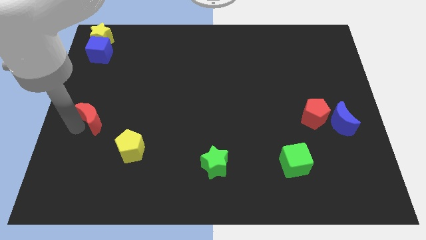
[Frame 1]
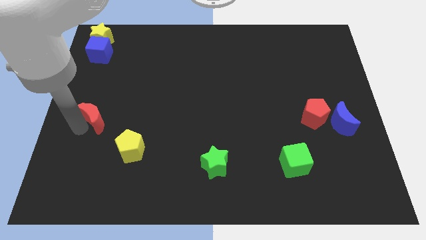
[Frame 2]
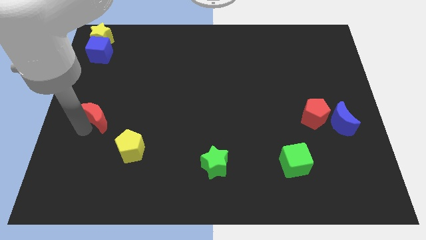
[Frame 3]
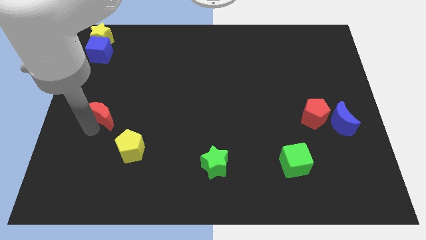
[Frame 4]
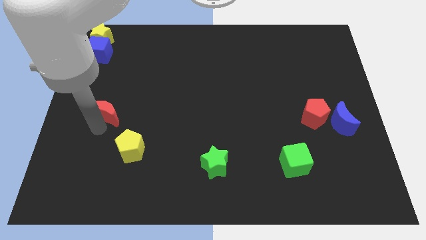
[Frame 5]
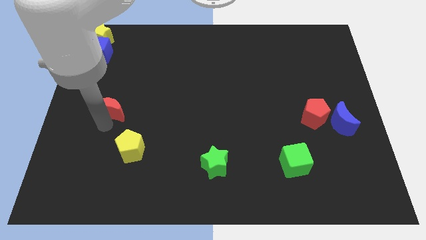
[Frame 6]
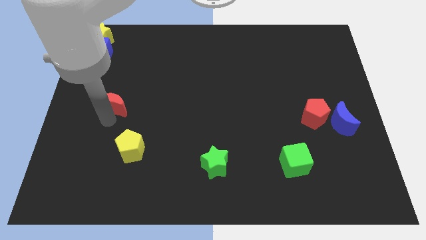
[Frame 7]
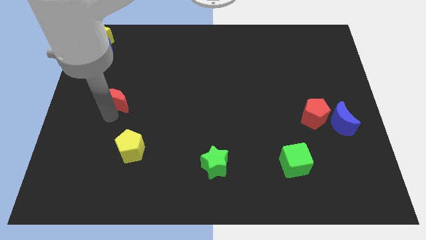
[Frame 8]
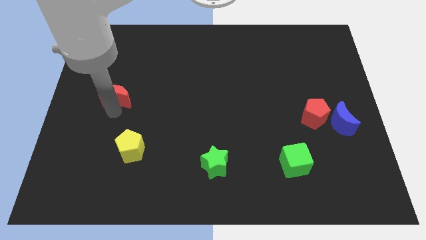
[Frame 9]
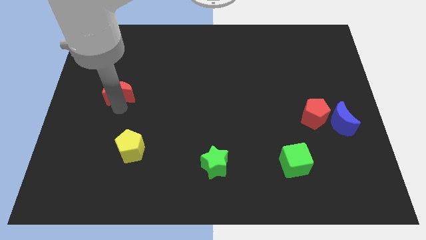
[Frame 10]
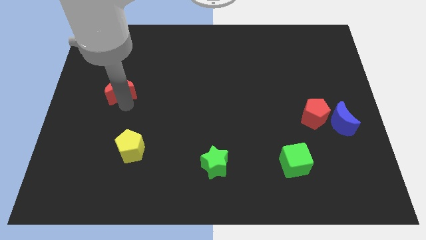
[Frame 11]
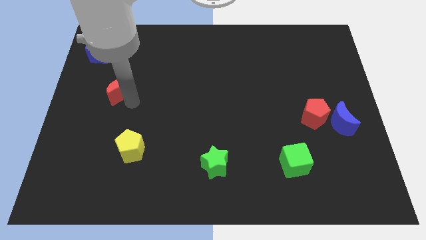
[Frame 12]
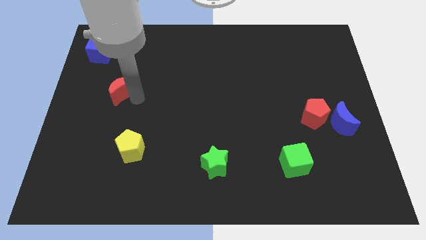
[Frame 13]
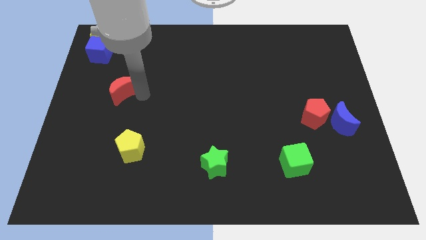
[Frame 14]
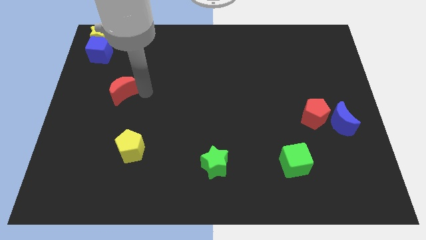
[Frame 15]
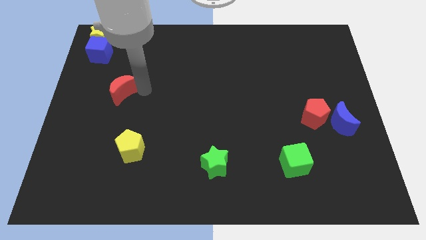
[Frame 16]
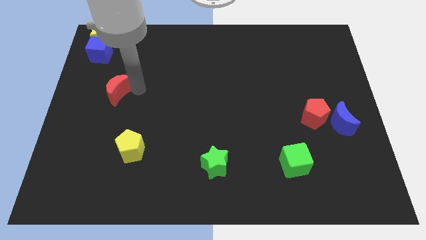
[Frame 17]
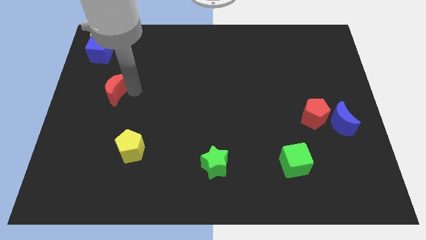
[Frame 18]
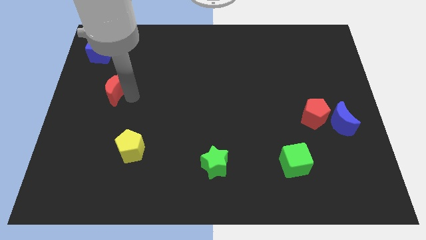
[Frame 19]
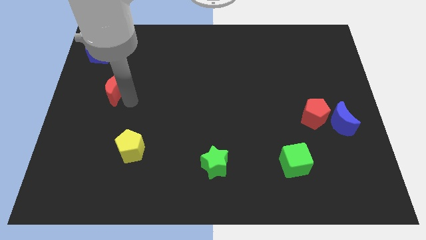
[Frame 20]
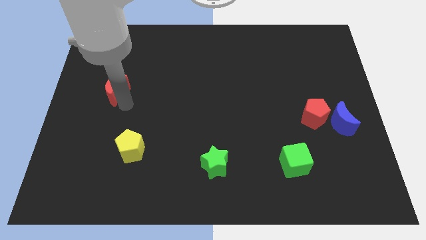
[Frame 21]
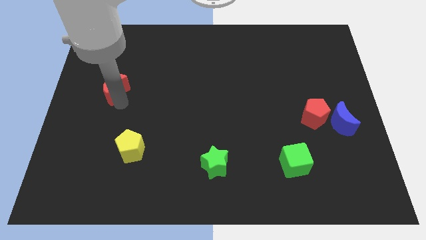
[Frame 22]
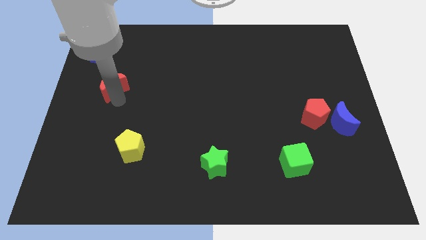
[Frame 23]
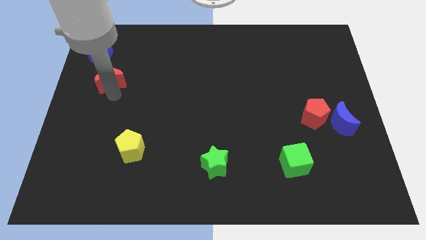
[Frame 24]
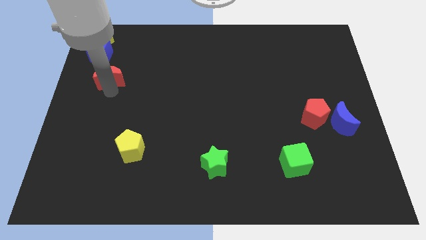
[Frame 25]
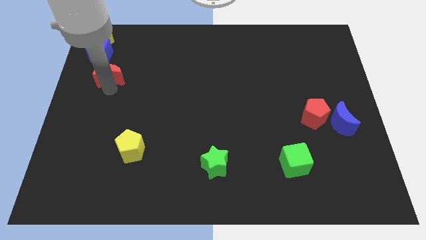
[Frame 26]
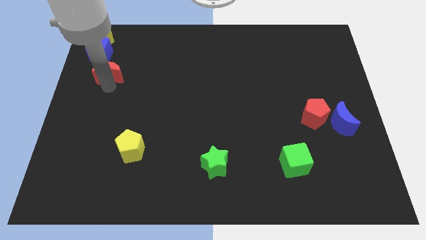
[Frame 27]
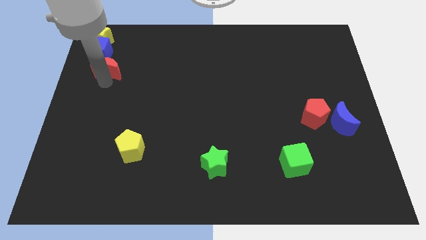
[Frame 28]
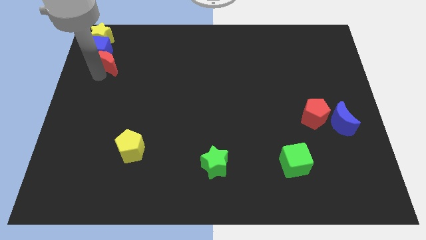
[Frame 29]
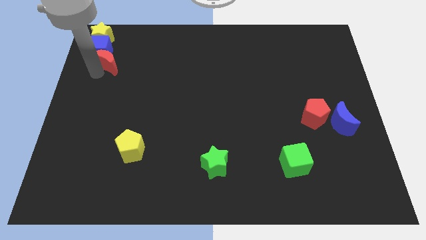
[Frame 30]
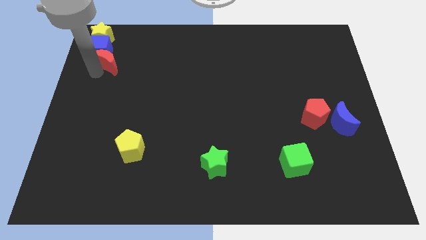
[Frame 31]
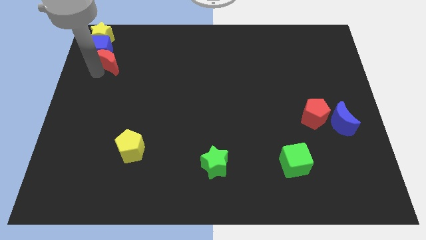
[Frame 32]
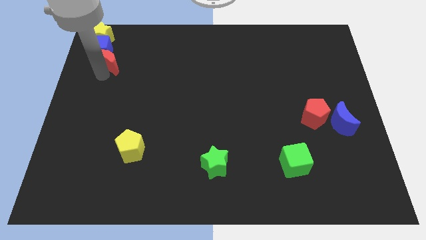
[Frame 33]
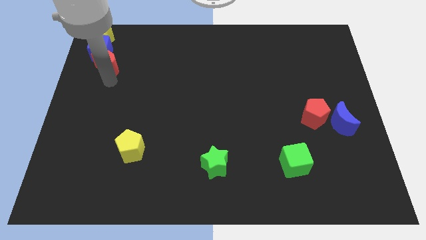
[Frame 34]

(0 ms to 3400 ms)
place the red moon below the blue cube

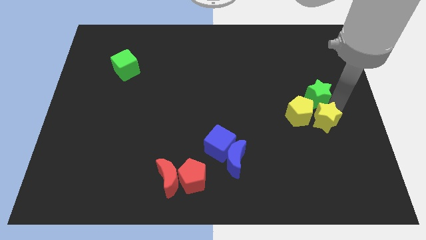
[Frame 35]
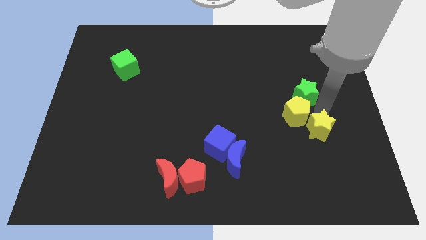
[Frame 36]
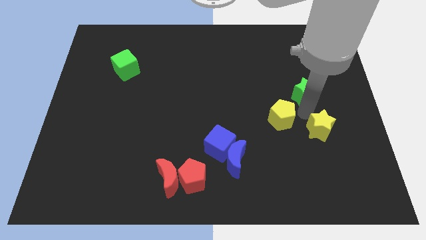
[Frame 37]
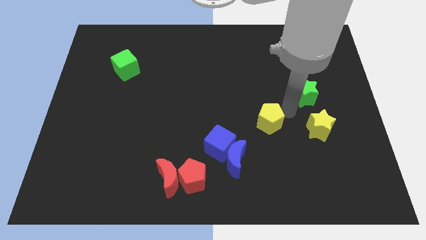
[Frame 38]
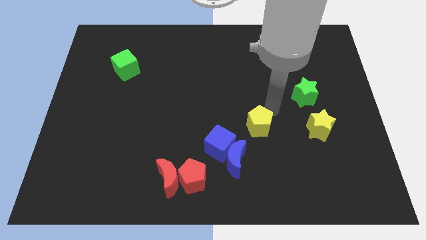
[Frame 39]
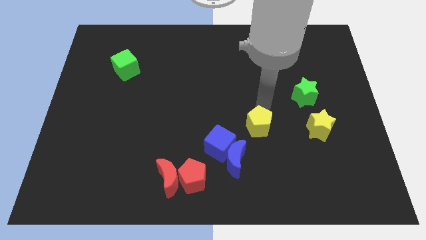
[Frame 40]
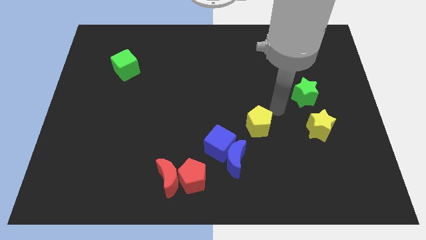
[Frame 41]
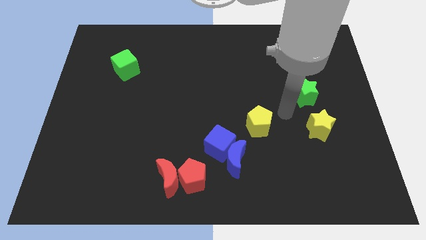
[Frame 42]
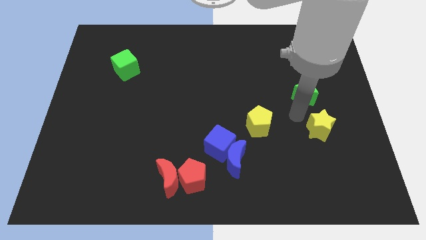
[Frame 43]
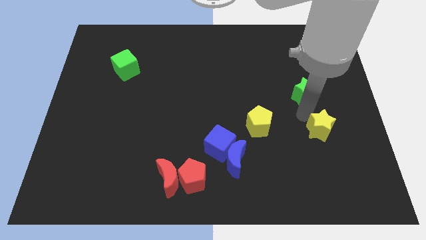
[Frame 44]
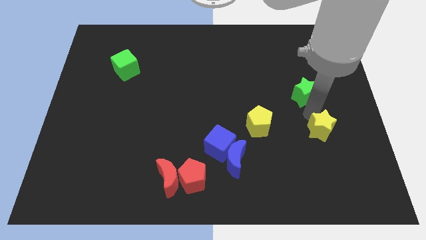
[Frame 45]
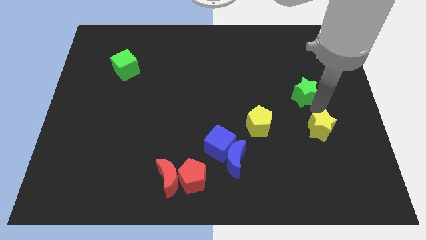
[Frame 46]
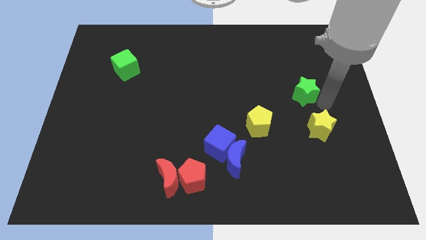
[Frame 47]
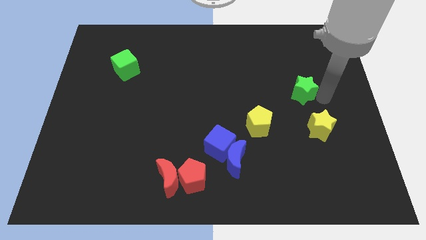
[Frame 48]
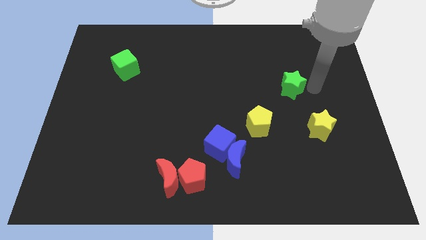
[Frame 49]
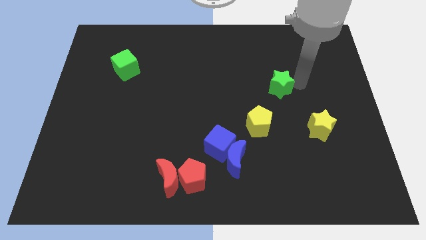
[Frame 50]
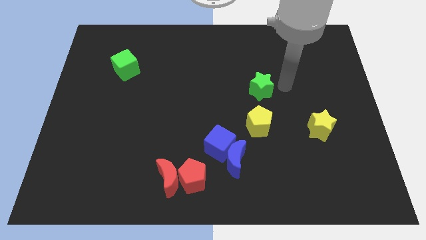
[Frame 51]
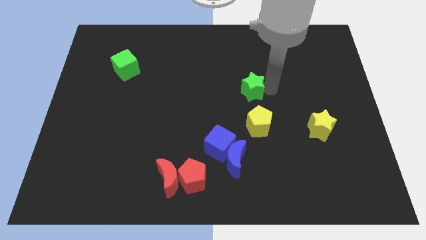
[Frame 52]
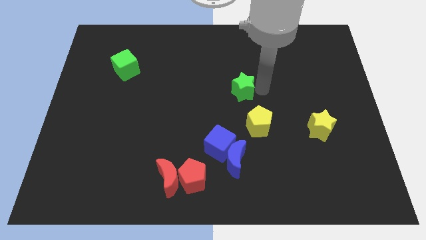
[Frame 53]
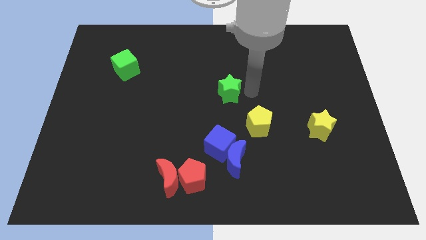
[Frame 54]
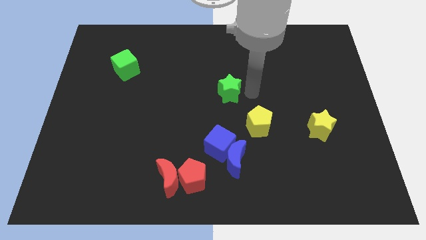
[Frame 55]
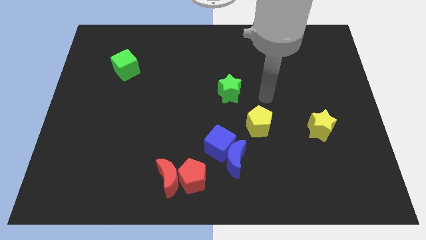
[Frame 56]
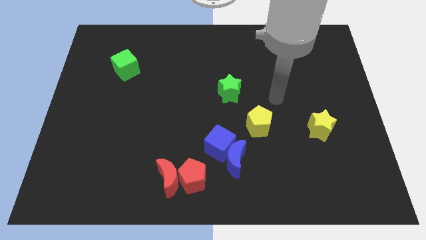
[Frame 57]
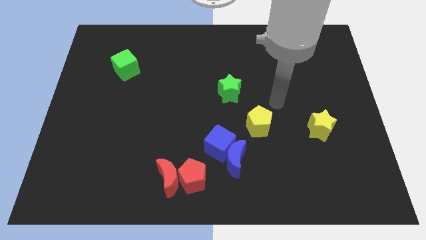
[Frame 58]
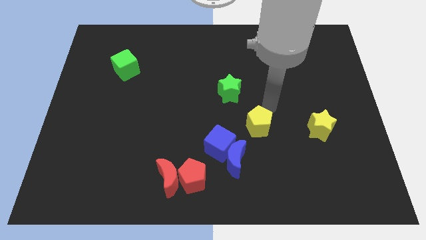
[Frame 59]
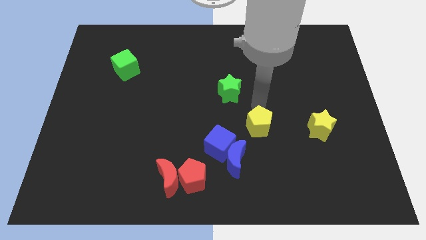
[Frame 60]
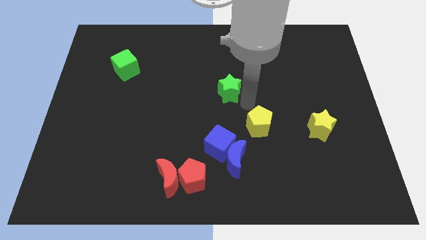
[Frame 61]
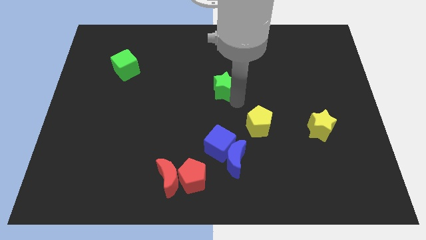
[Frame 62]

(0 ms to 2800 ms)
push the yellow pentagon near the blue cube

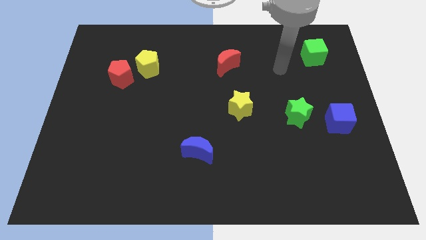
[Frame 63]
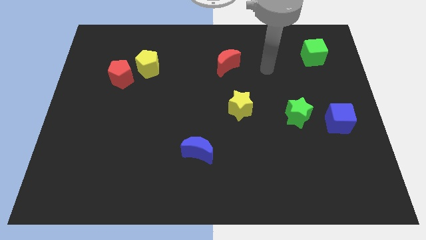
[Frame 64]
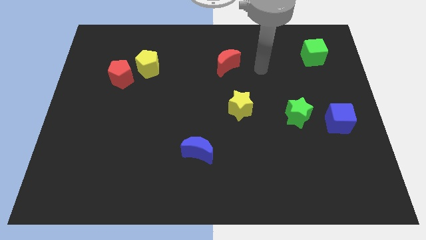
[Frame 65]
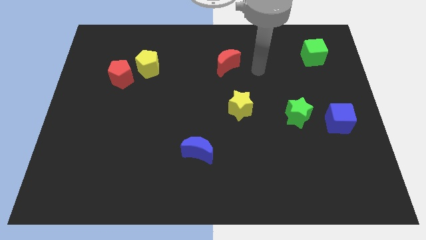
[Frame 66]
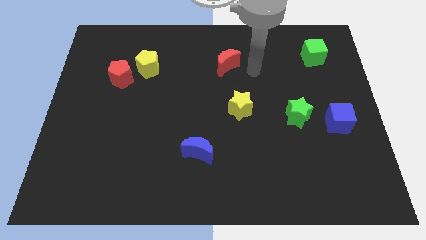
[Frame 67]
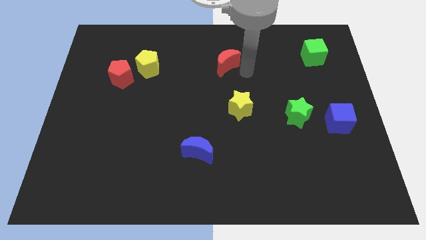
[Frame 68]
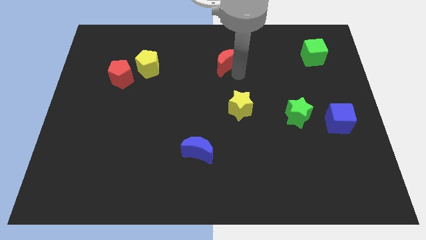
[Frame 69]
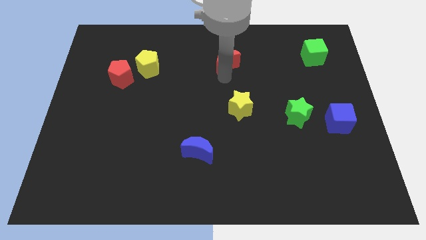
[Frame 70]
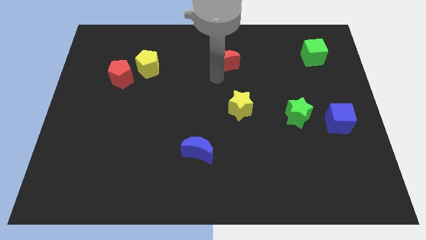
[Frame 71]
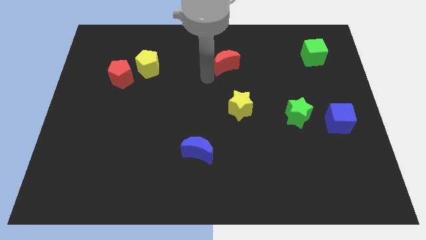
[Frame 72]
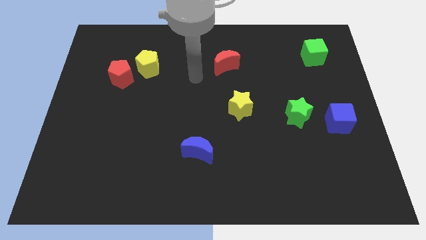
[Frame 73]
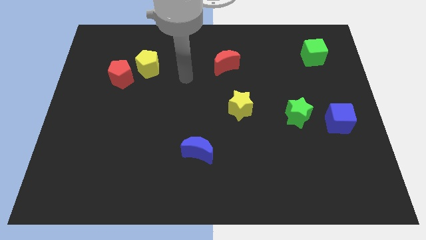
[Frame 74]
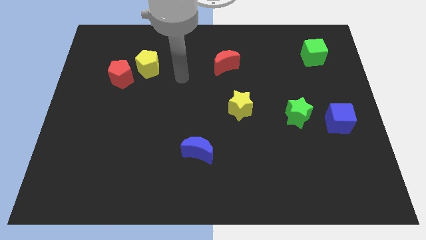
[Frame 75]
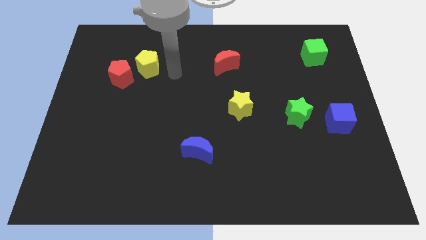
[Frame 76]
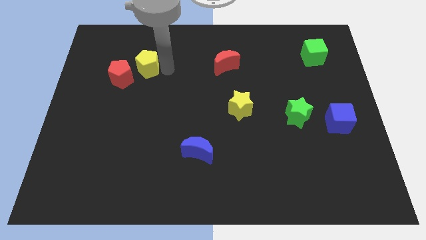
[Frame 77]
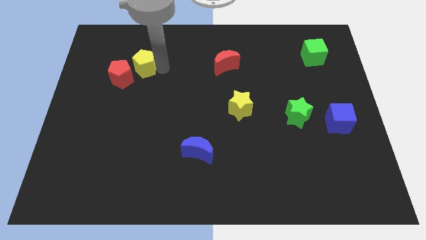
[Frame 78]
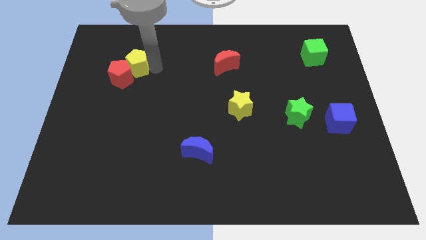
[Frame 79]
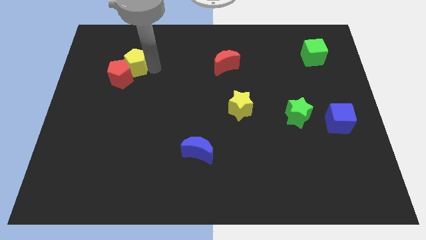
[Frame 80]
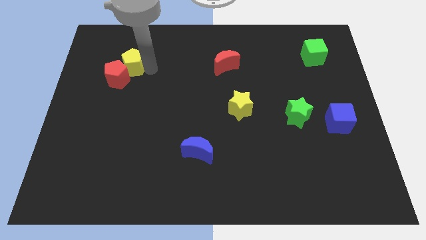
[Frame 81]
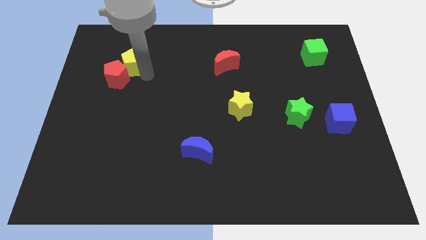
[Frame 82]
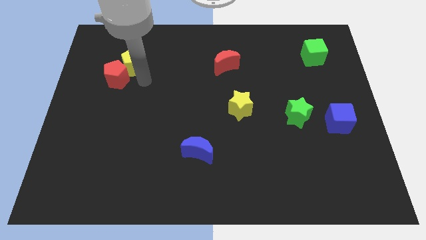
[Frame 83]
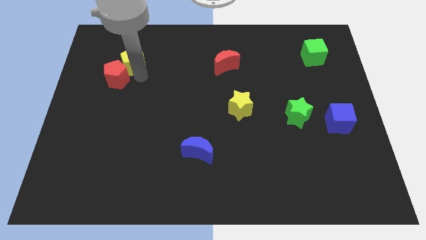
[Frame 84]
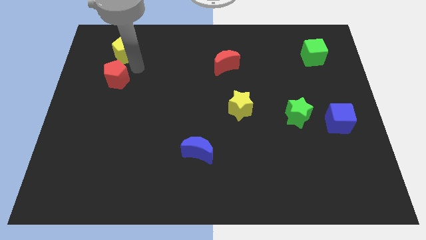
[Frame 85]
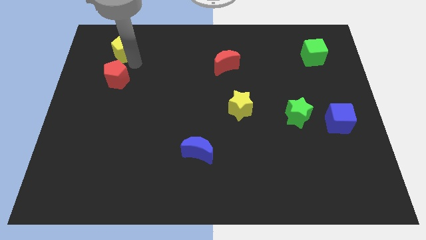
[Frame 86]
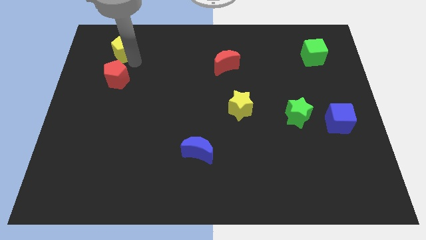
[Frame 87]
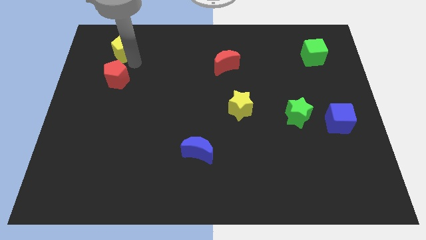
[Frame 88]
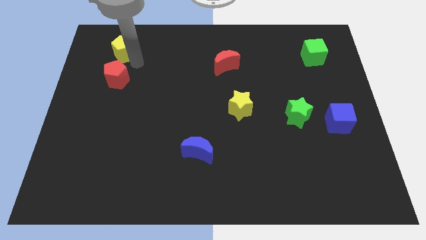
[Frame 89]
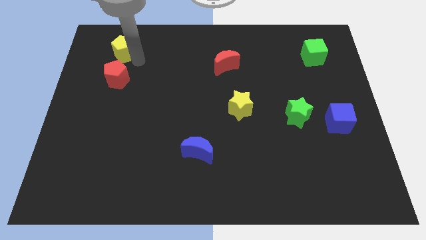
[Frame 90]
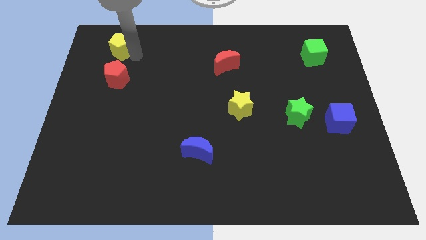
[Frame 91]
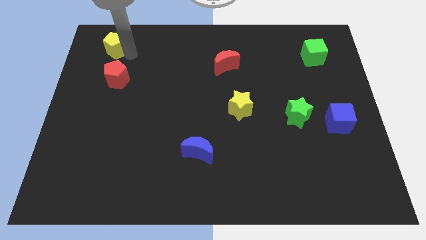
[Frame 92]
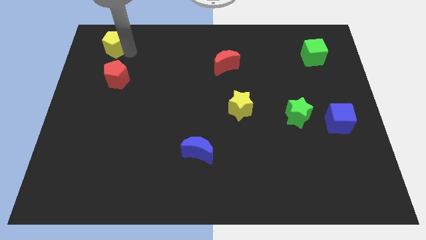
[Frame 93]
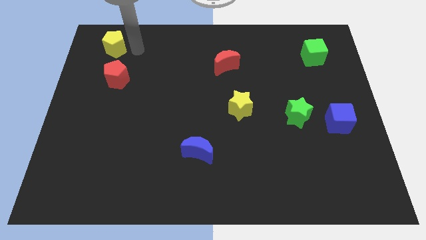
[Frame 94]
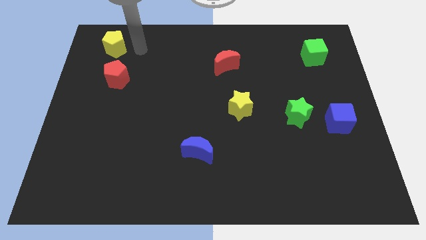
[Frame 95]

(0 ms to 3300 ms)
push the yellow pentagon to the top of the red pentagon
